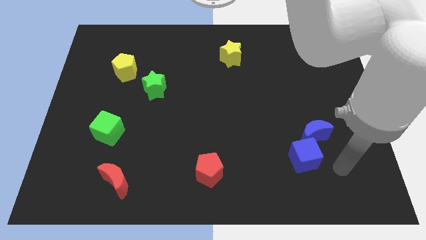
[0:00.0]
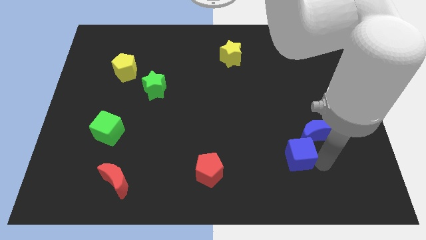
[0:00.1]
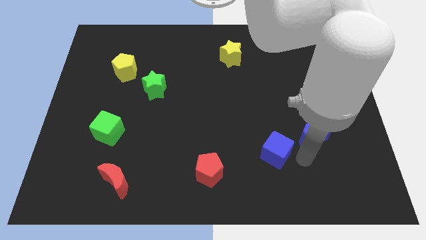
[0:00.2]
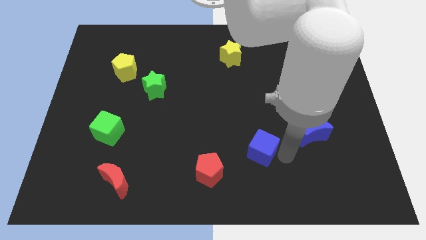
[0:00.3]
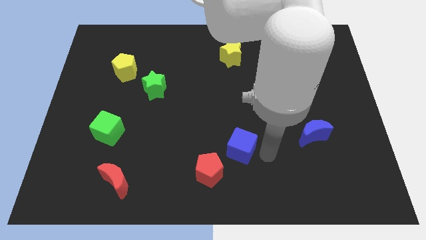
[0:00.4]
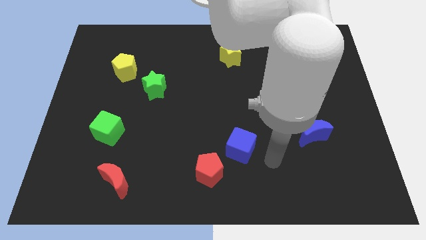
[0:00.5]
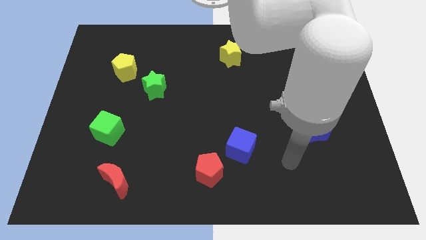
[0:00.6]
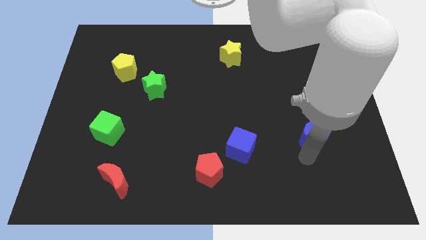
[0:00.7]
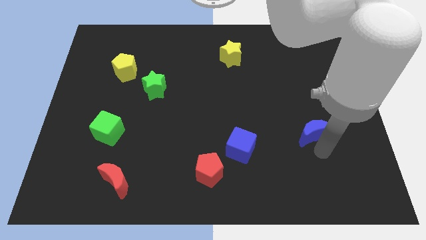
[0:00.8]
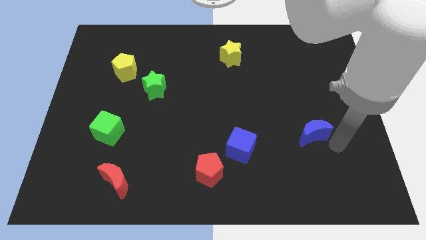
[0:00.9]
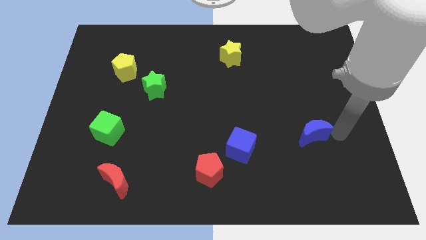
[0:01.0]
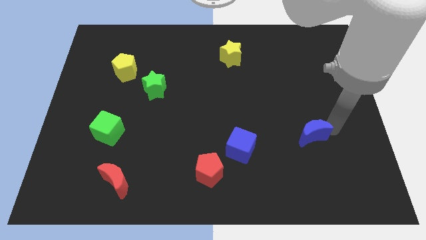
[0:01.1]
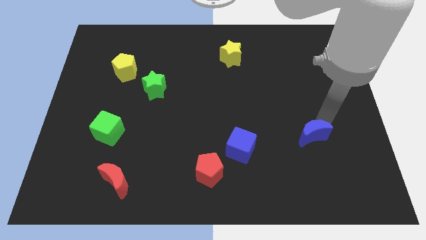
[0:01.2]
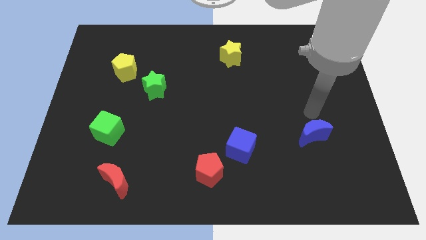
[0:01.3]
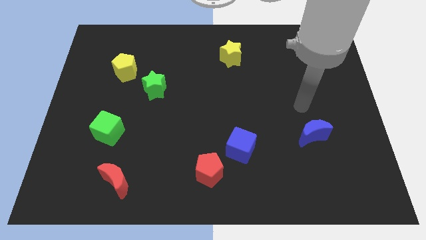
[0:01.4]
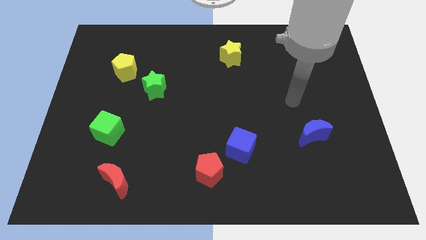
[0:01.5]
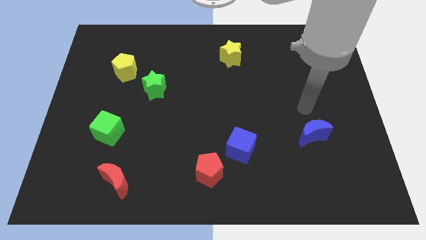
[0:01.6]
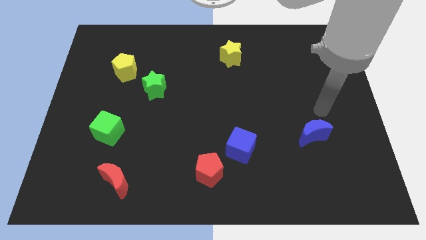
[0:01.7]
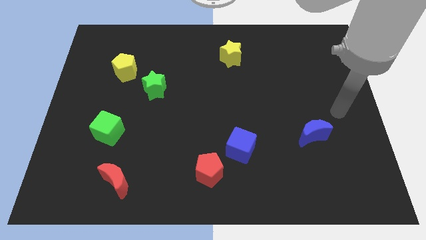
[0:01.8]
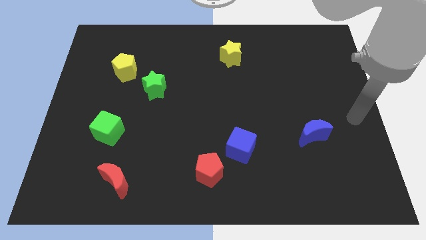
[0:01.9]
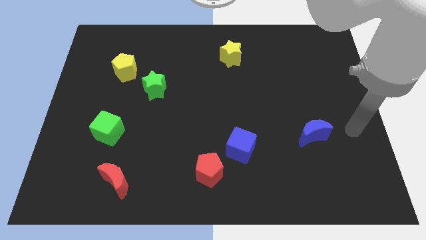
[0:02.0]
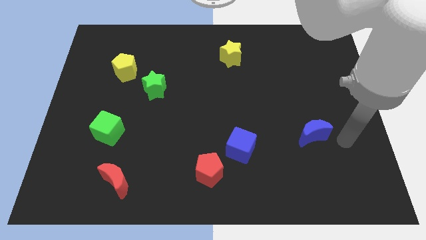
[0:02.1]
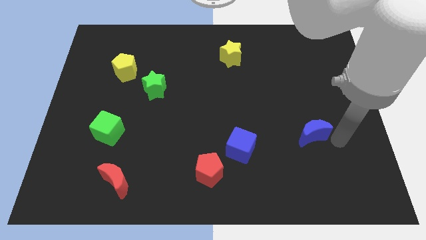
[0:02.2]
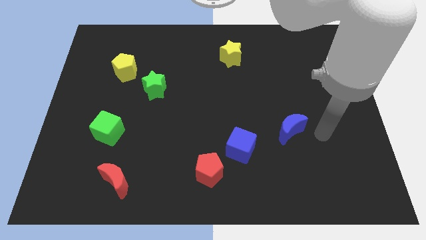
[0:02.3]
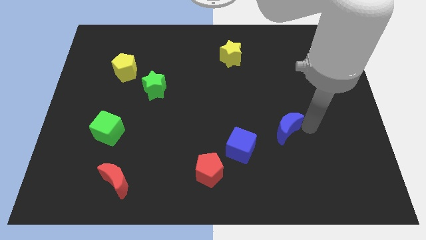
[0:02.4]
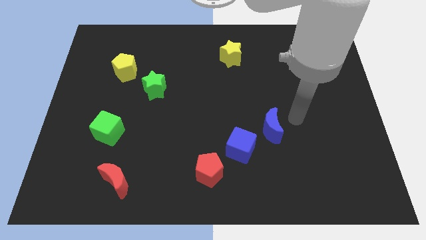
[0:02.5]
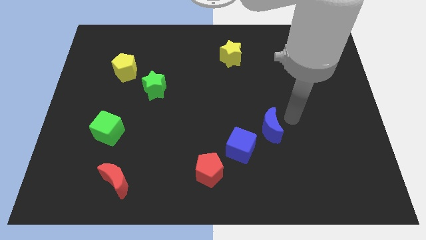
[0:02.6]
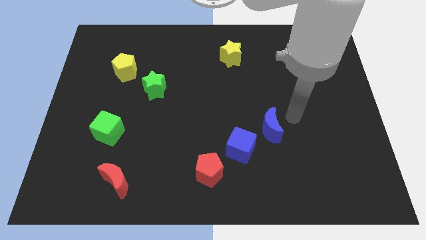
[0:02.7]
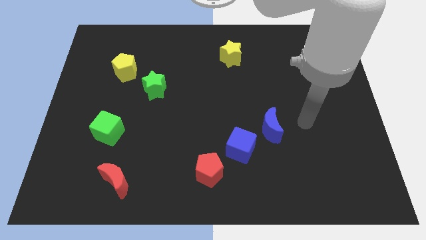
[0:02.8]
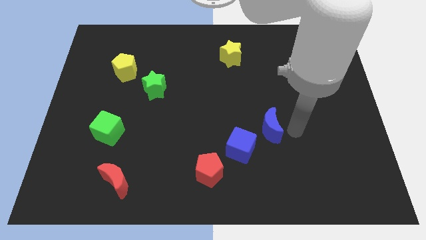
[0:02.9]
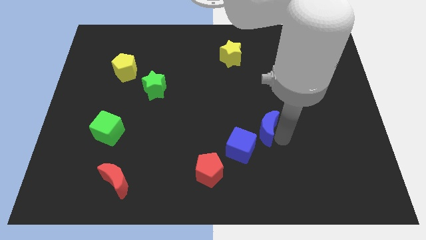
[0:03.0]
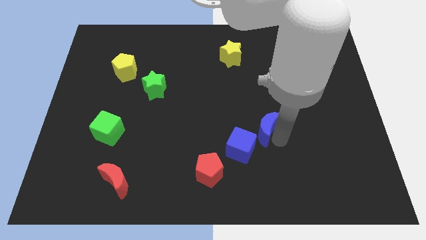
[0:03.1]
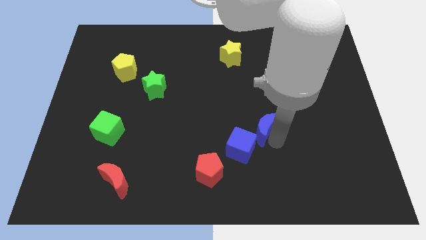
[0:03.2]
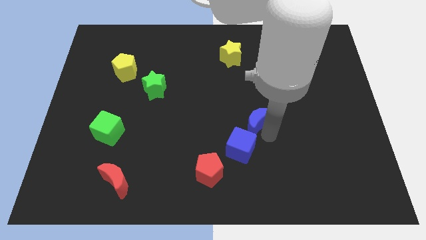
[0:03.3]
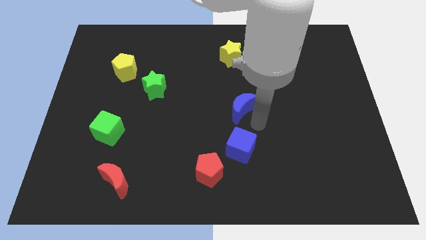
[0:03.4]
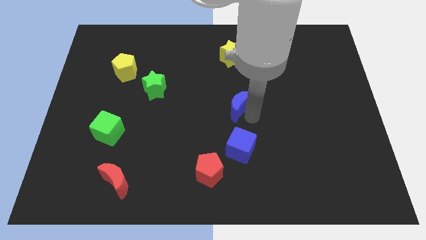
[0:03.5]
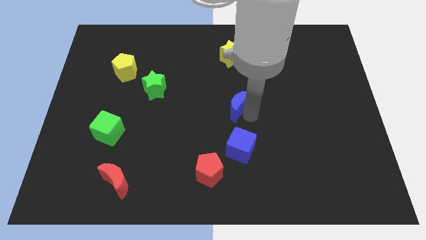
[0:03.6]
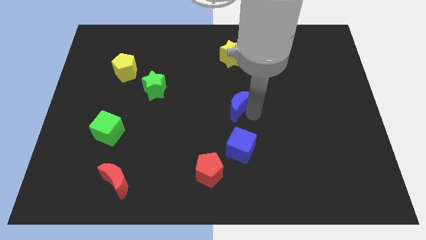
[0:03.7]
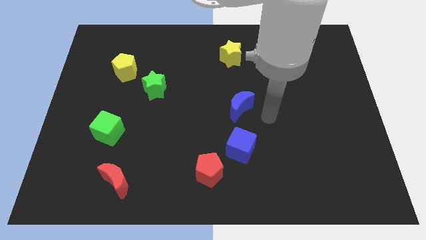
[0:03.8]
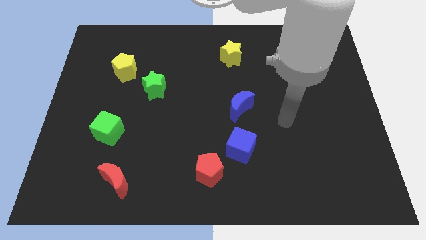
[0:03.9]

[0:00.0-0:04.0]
move the blue blocks to the center

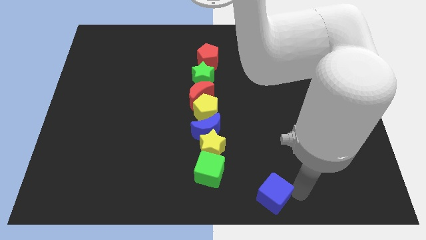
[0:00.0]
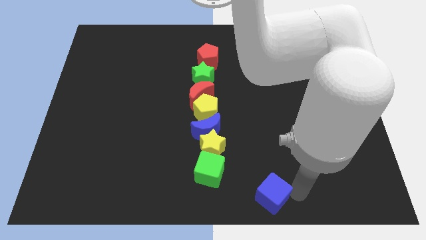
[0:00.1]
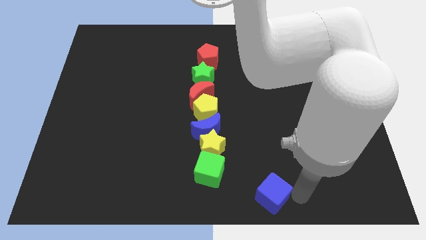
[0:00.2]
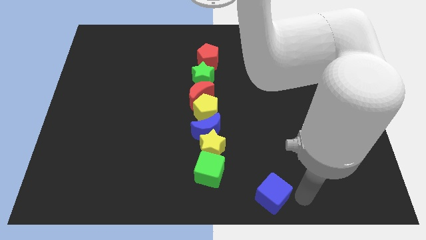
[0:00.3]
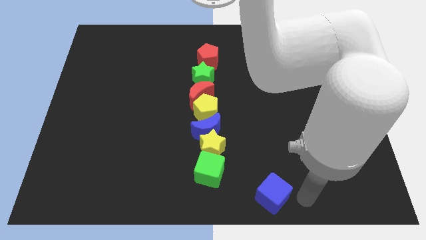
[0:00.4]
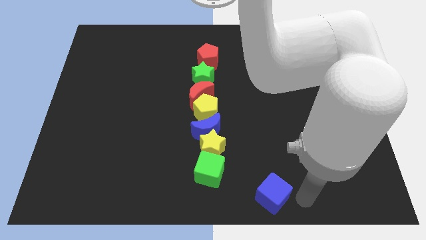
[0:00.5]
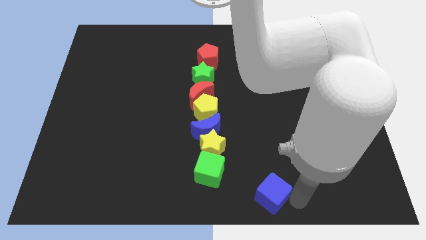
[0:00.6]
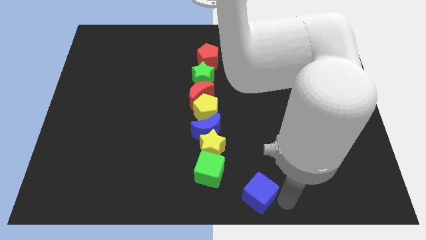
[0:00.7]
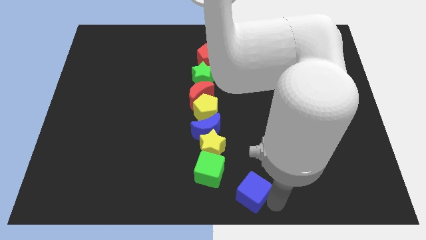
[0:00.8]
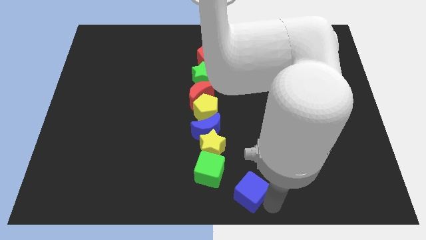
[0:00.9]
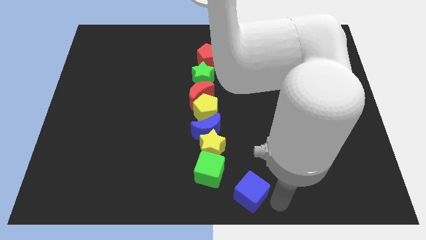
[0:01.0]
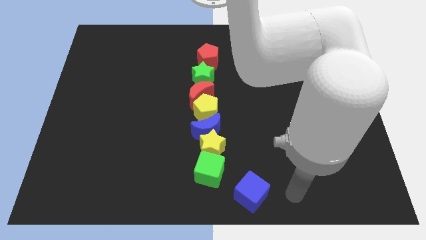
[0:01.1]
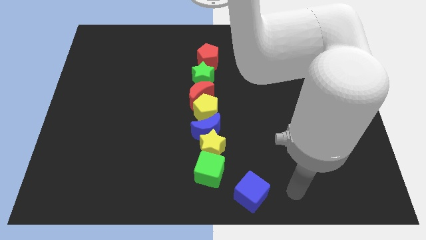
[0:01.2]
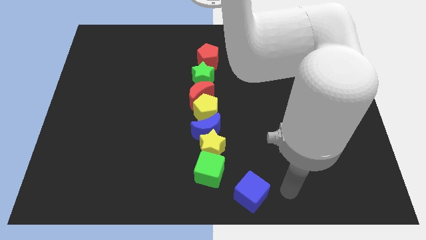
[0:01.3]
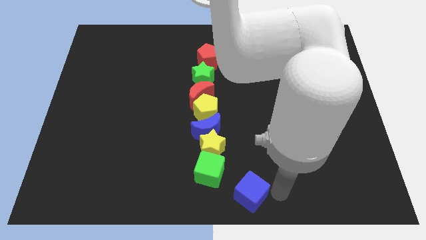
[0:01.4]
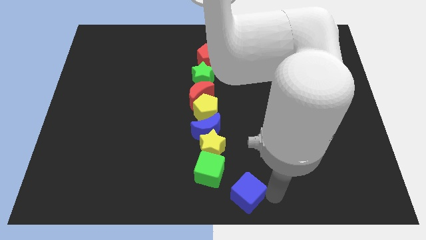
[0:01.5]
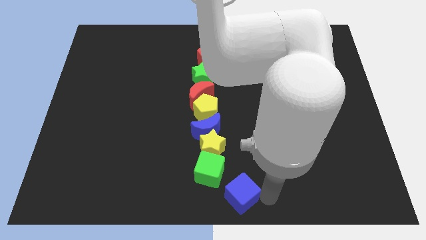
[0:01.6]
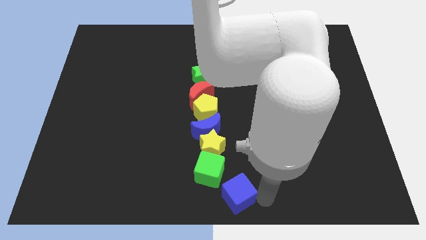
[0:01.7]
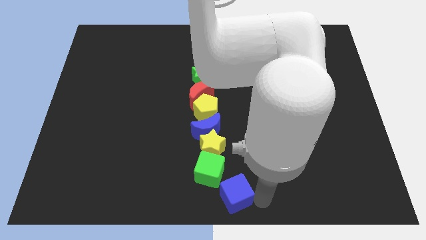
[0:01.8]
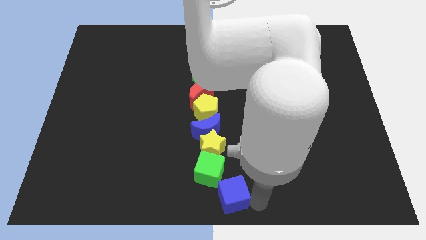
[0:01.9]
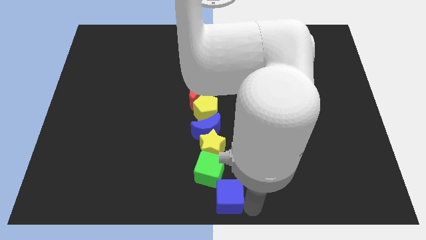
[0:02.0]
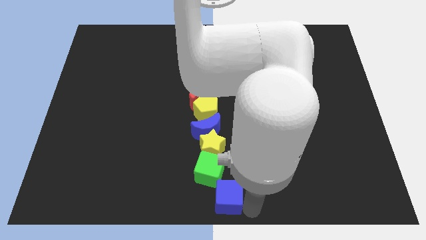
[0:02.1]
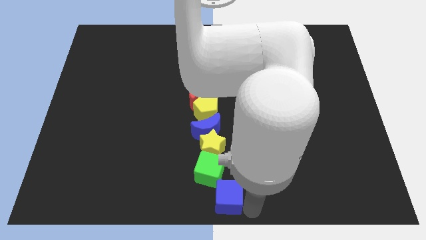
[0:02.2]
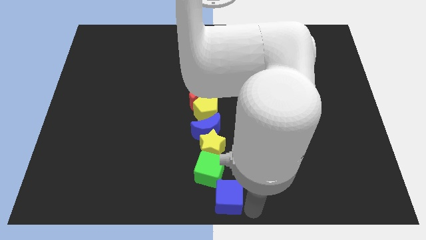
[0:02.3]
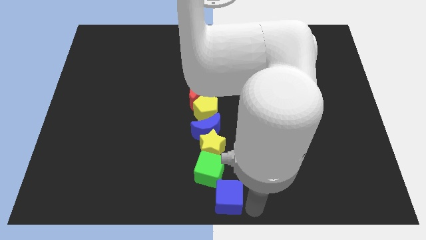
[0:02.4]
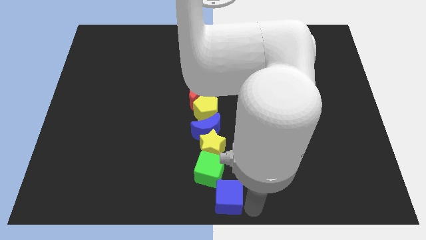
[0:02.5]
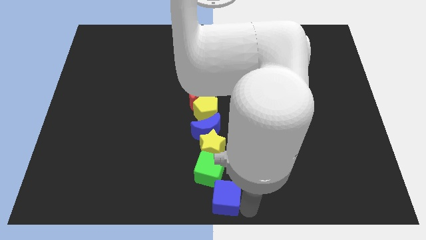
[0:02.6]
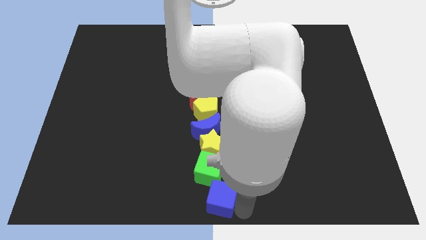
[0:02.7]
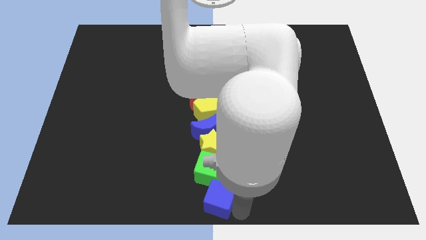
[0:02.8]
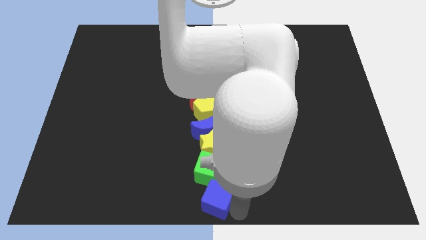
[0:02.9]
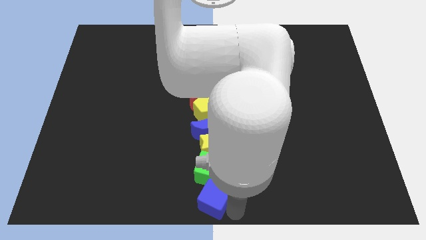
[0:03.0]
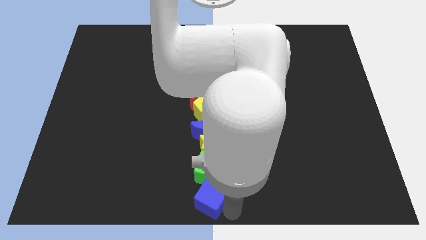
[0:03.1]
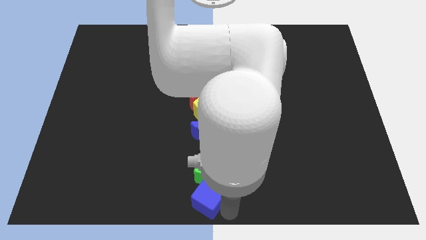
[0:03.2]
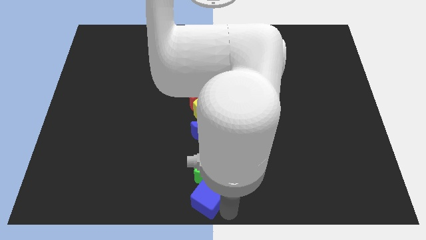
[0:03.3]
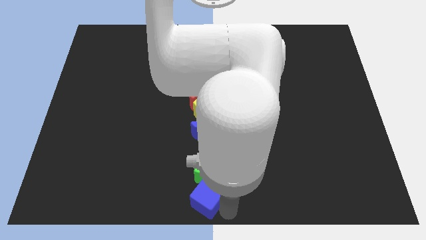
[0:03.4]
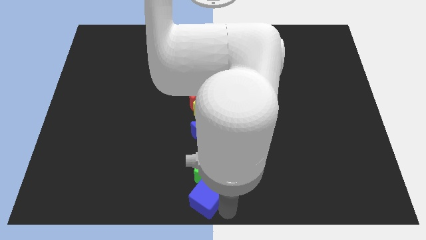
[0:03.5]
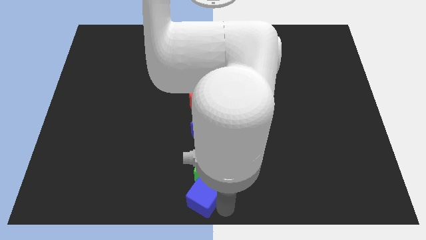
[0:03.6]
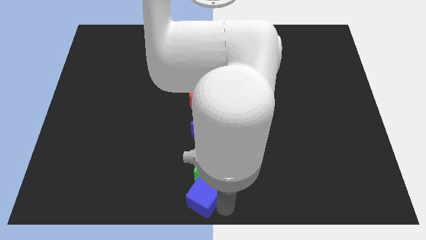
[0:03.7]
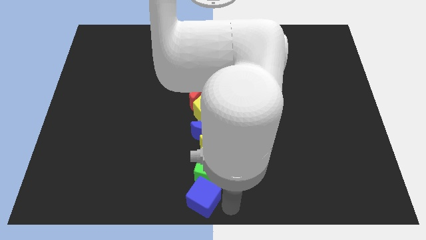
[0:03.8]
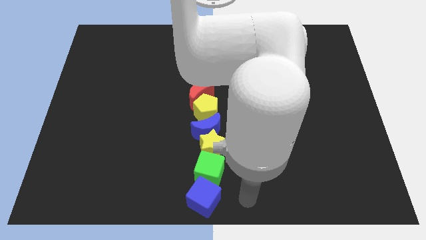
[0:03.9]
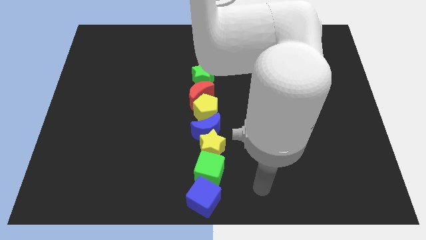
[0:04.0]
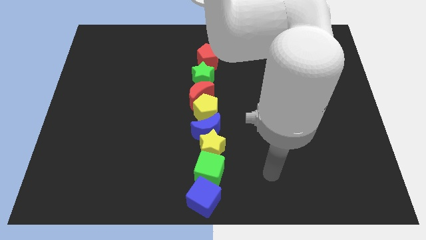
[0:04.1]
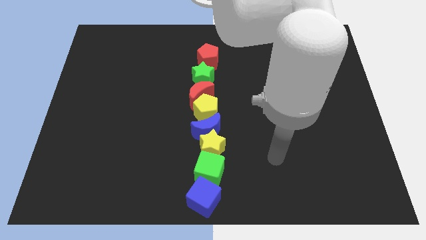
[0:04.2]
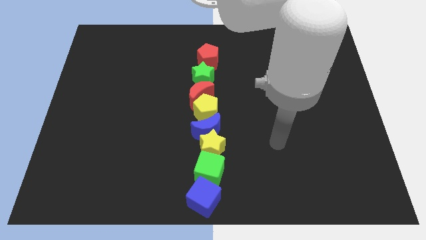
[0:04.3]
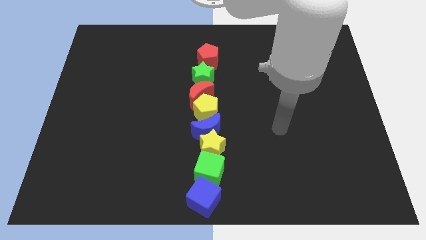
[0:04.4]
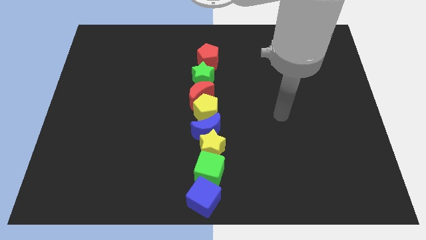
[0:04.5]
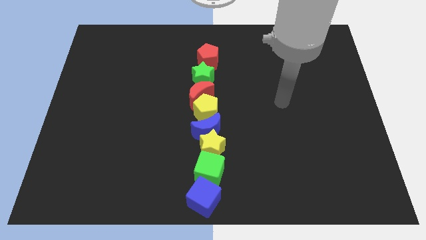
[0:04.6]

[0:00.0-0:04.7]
arrange all the blocks in a vertical line

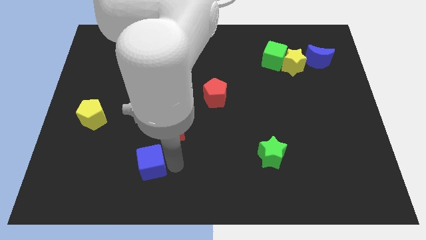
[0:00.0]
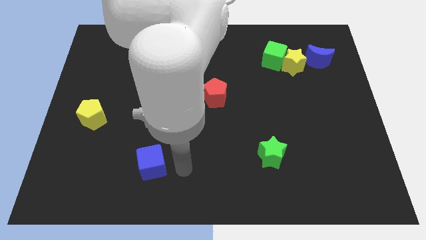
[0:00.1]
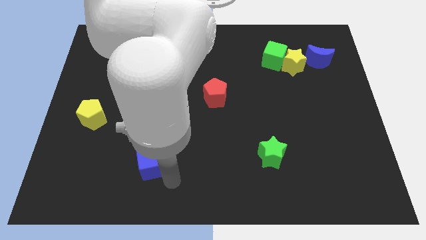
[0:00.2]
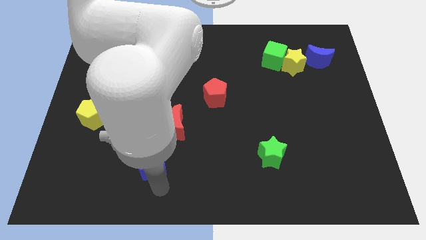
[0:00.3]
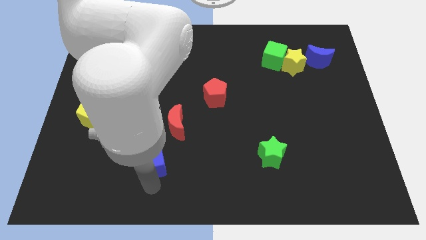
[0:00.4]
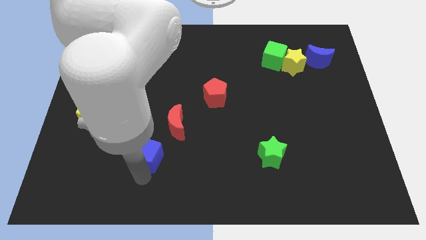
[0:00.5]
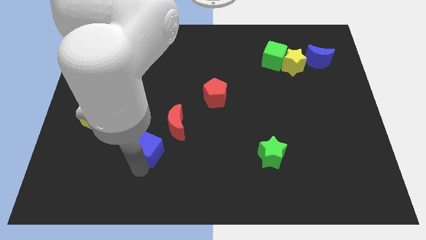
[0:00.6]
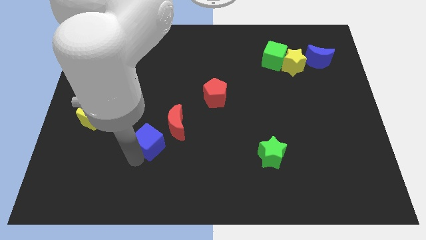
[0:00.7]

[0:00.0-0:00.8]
touch the bottom of blue cube
